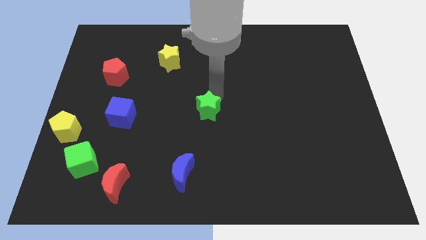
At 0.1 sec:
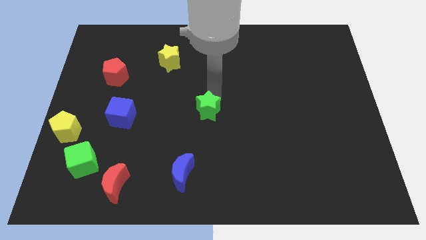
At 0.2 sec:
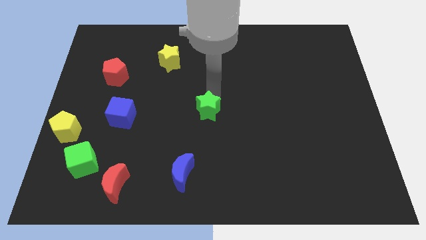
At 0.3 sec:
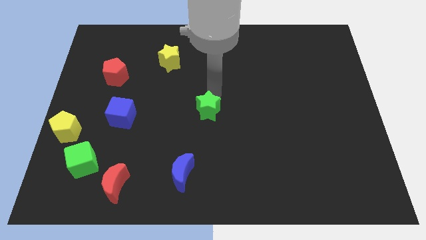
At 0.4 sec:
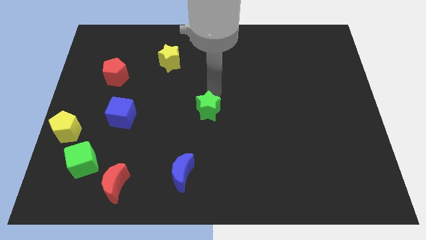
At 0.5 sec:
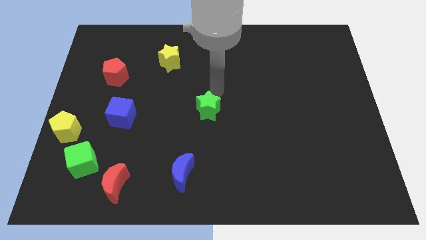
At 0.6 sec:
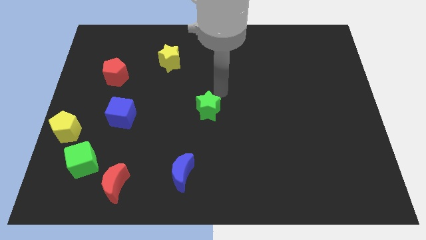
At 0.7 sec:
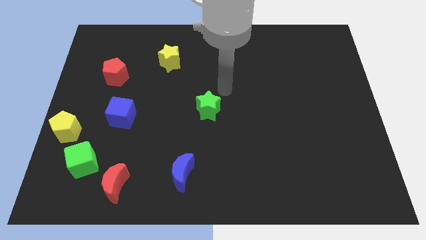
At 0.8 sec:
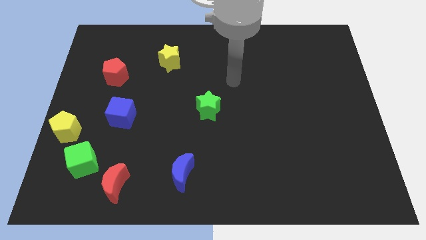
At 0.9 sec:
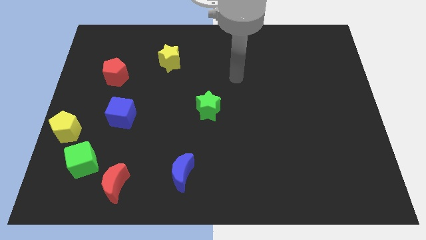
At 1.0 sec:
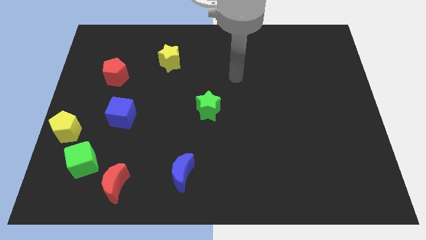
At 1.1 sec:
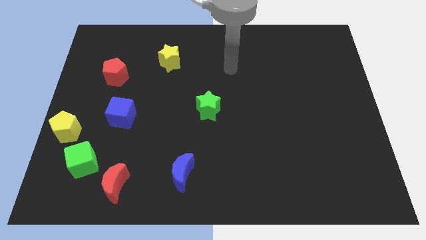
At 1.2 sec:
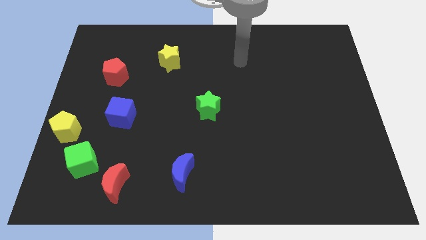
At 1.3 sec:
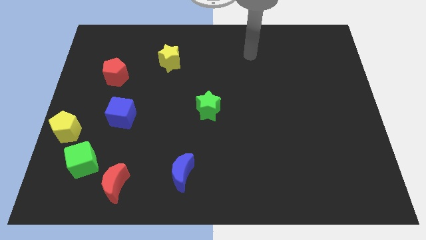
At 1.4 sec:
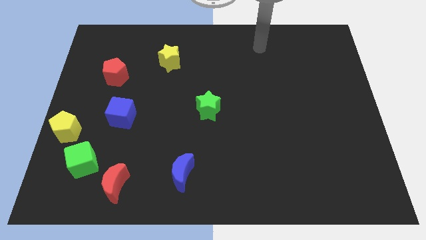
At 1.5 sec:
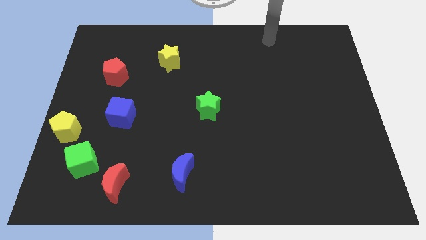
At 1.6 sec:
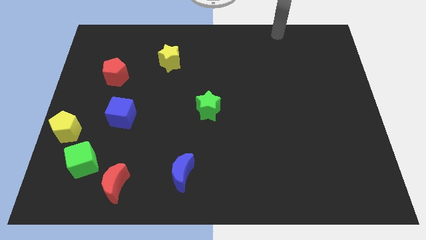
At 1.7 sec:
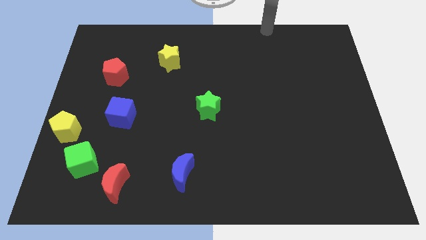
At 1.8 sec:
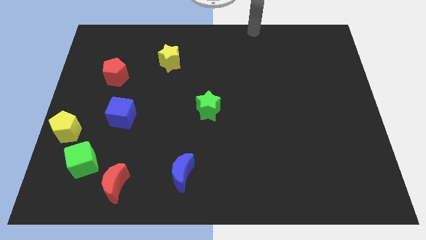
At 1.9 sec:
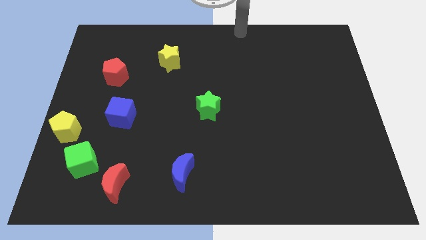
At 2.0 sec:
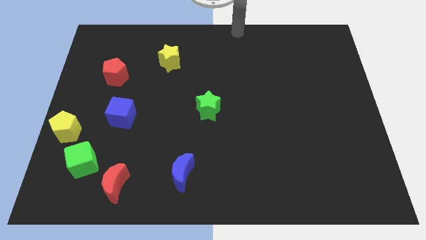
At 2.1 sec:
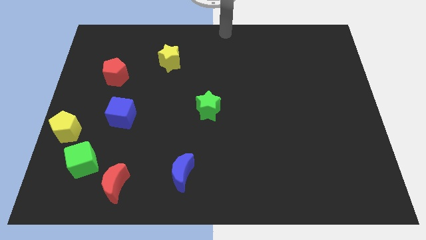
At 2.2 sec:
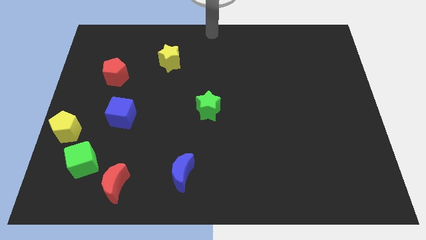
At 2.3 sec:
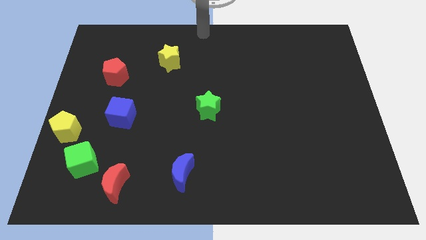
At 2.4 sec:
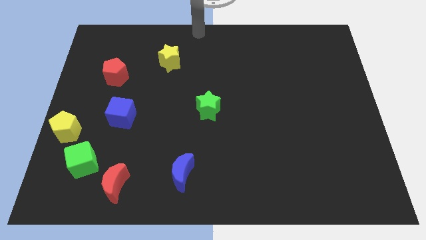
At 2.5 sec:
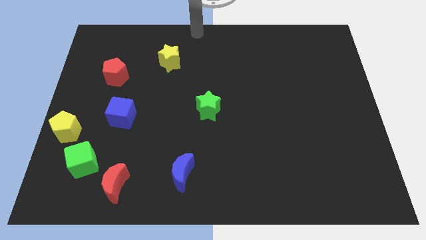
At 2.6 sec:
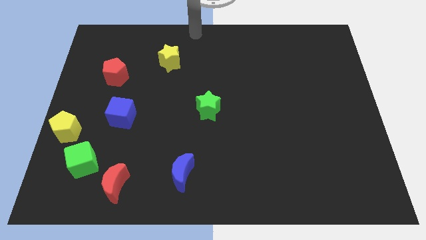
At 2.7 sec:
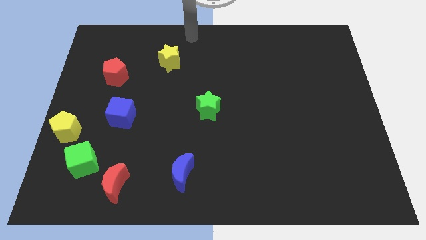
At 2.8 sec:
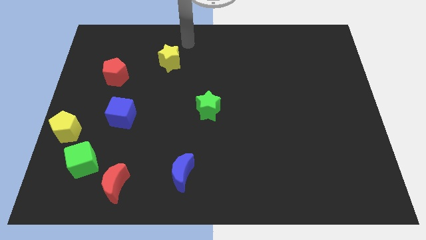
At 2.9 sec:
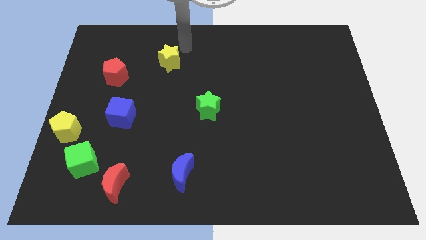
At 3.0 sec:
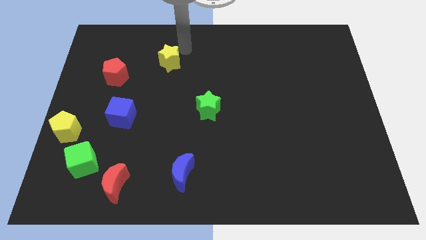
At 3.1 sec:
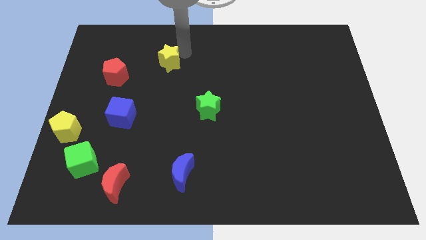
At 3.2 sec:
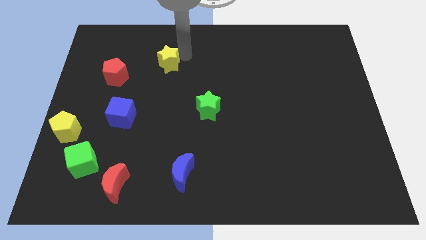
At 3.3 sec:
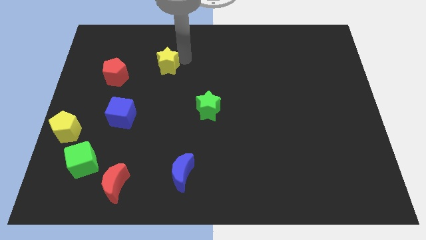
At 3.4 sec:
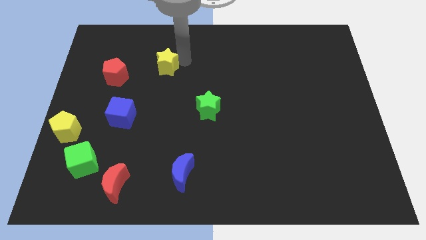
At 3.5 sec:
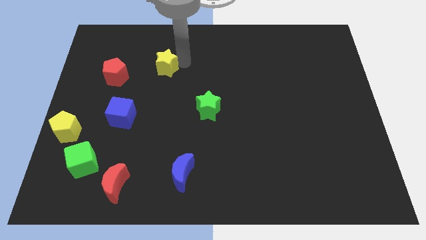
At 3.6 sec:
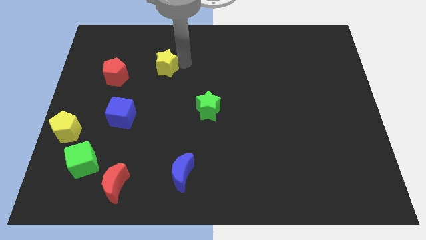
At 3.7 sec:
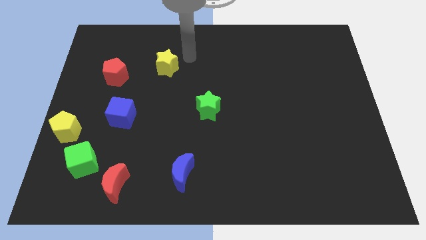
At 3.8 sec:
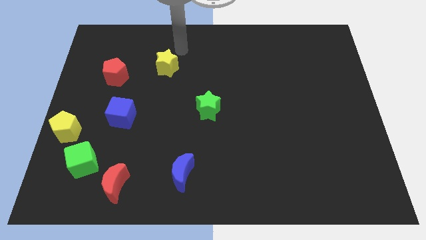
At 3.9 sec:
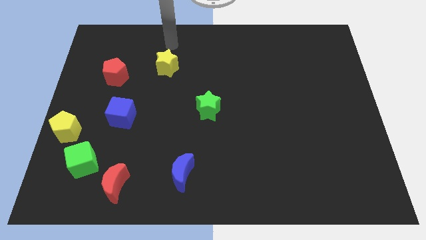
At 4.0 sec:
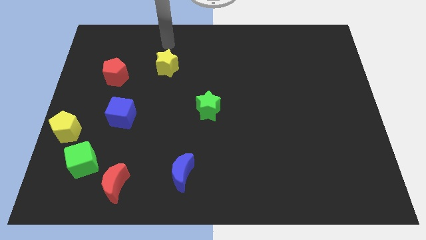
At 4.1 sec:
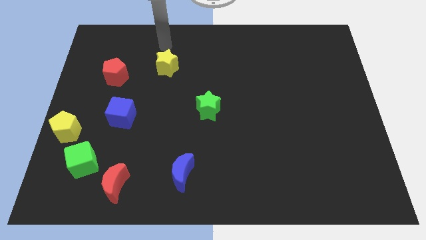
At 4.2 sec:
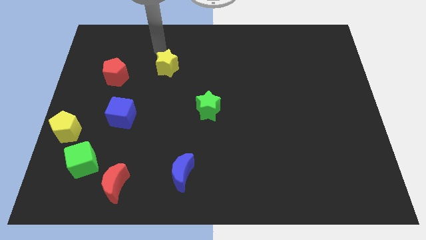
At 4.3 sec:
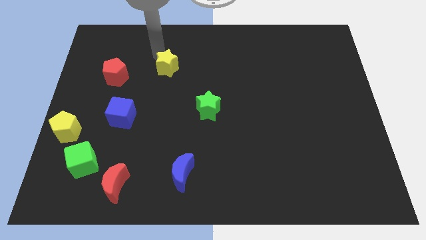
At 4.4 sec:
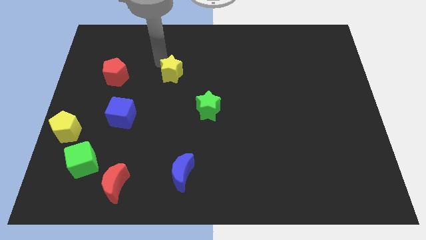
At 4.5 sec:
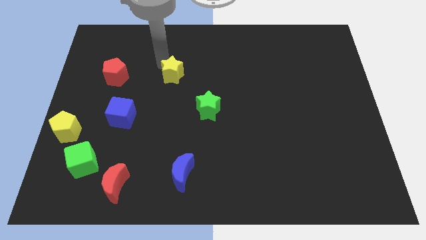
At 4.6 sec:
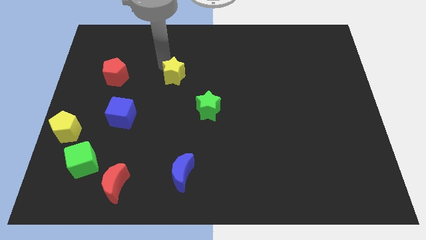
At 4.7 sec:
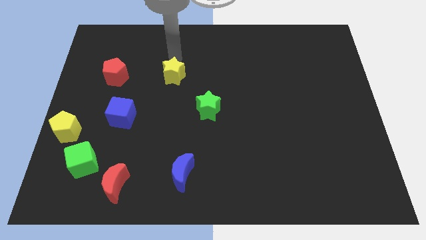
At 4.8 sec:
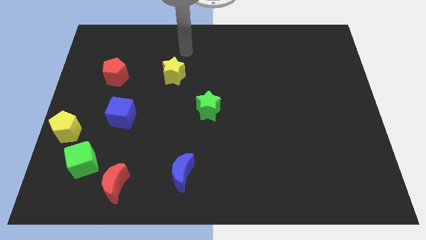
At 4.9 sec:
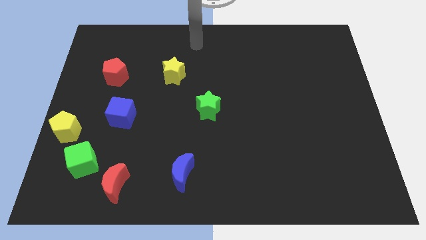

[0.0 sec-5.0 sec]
place the yellow star to the right of the red pentagon

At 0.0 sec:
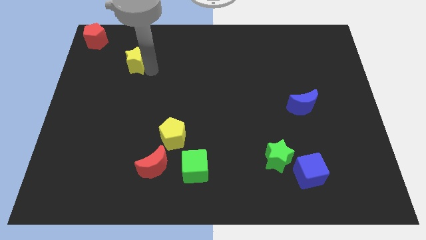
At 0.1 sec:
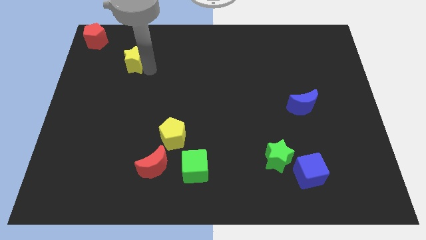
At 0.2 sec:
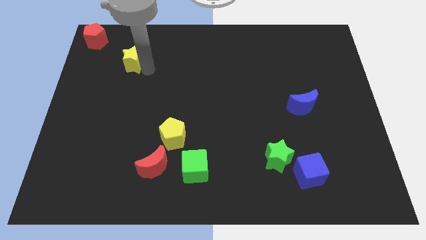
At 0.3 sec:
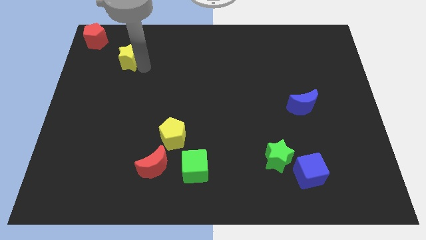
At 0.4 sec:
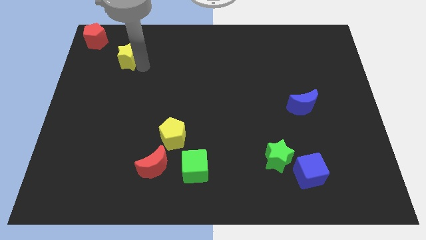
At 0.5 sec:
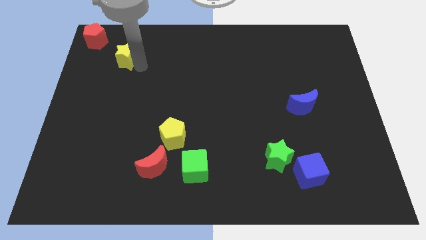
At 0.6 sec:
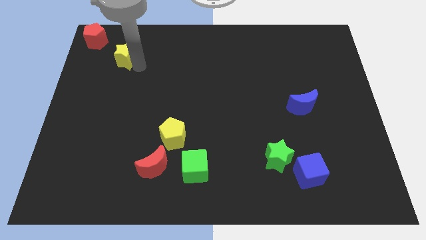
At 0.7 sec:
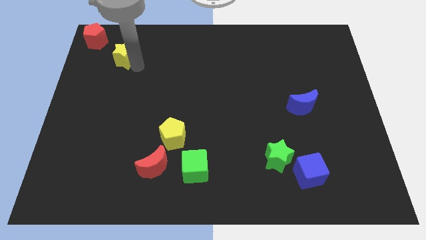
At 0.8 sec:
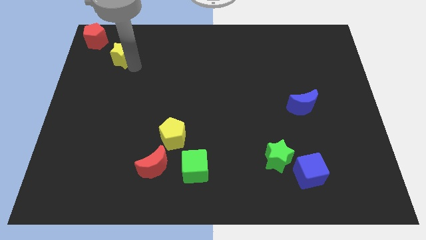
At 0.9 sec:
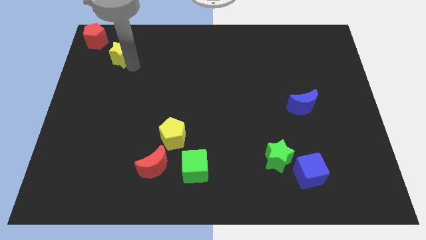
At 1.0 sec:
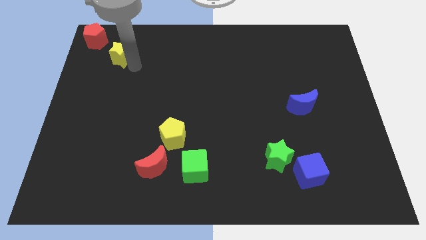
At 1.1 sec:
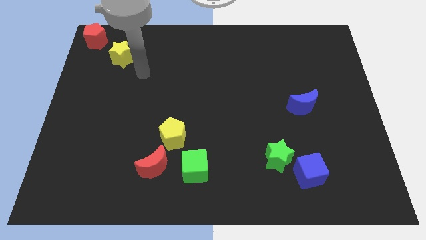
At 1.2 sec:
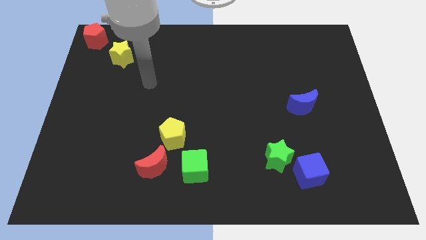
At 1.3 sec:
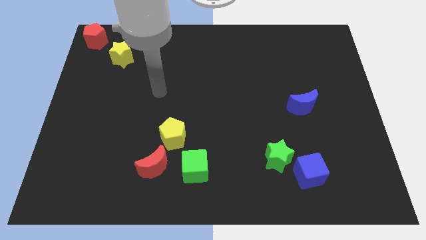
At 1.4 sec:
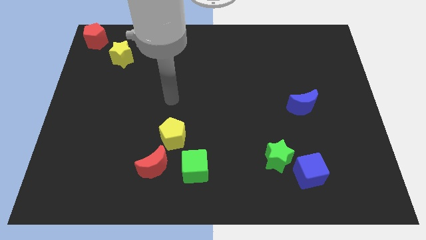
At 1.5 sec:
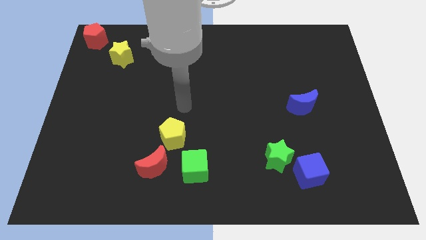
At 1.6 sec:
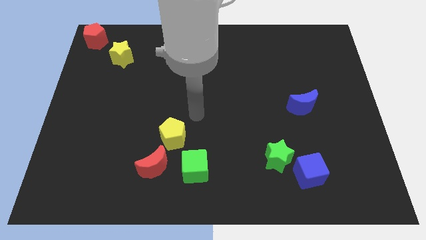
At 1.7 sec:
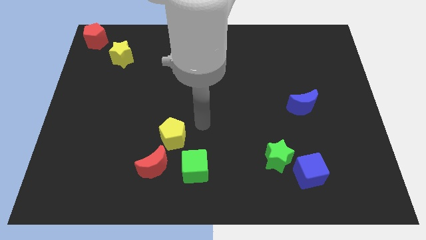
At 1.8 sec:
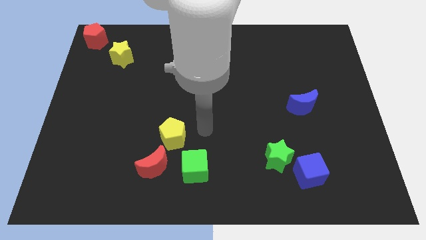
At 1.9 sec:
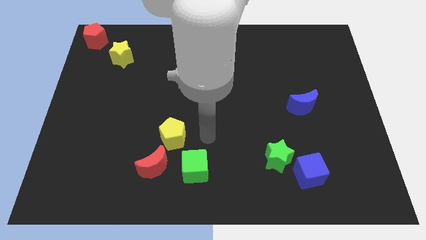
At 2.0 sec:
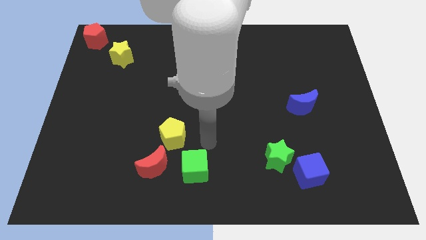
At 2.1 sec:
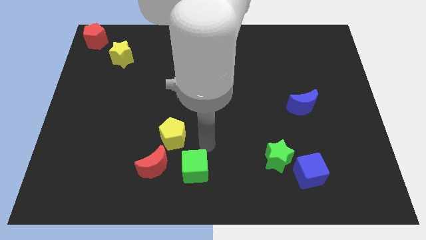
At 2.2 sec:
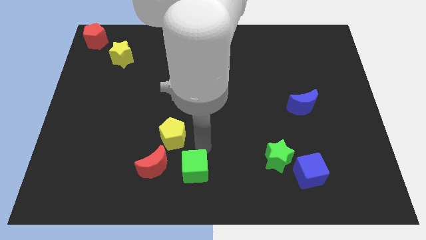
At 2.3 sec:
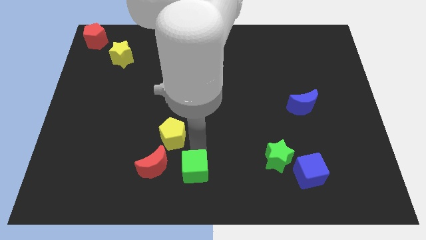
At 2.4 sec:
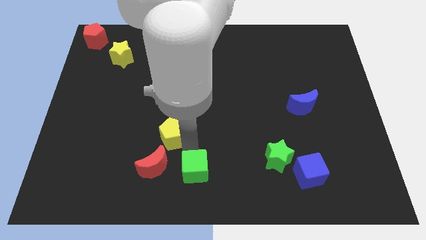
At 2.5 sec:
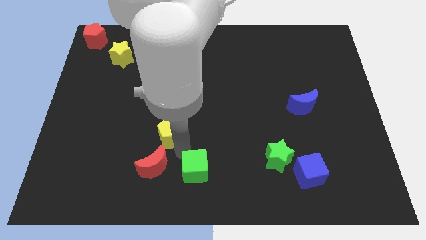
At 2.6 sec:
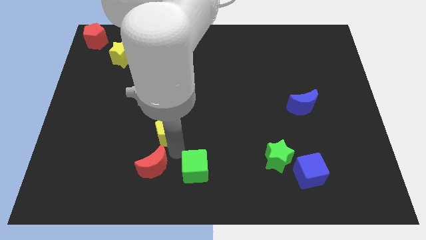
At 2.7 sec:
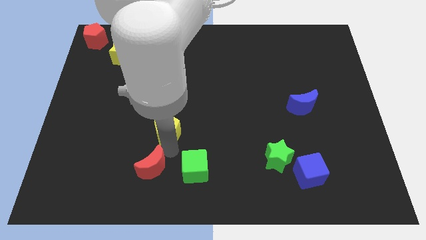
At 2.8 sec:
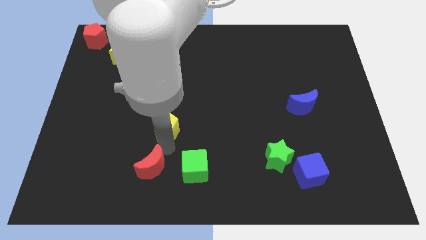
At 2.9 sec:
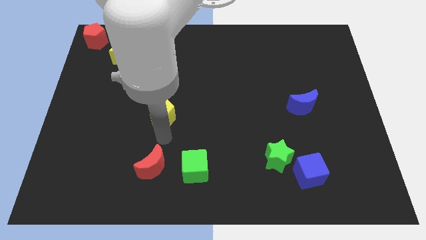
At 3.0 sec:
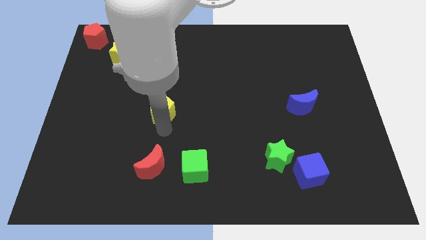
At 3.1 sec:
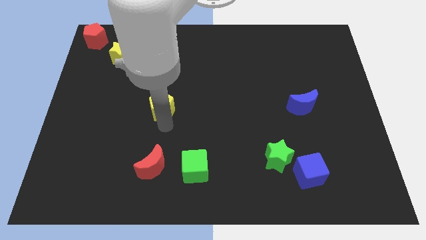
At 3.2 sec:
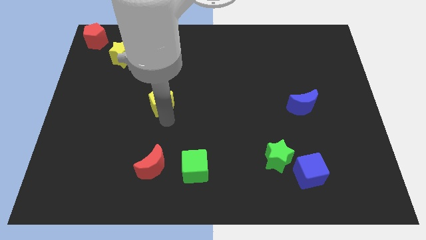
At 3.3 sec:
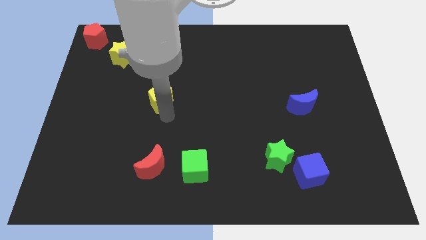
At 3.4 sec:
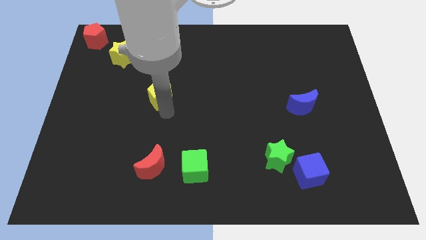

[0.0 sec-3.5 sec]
move yellow pentagon towards the yellow star

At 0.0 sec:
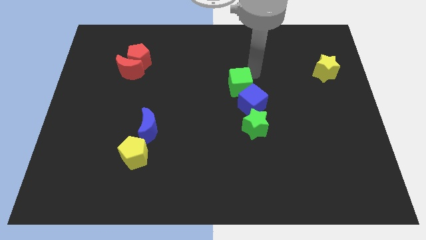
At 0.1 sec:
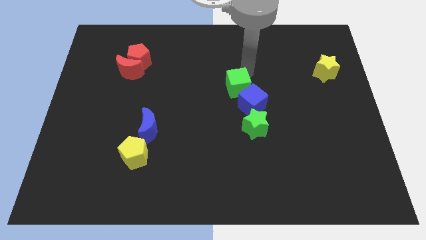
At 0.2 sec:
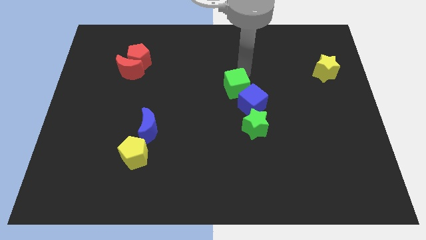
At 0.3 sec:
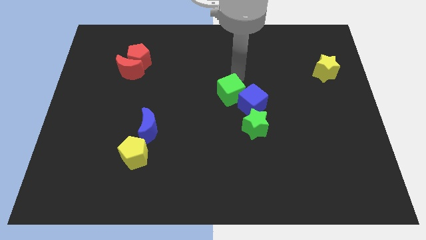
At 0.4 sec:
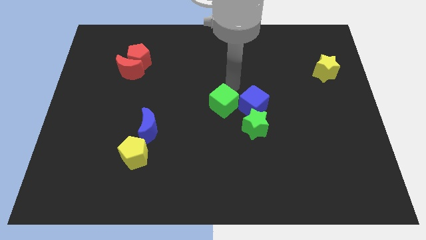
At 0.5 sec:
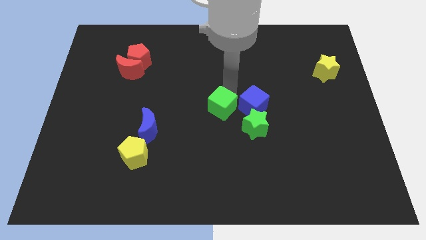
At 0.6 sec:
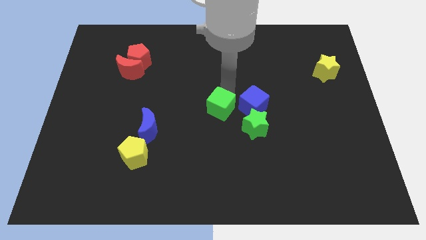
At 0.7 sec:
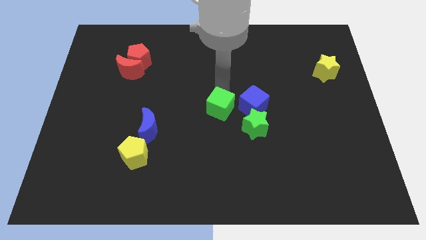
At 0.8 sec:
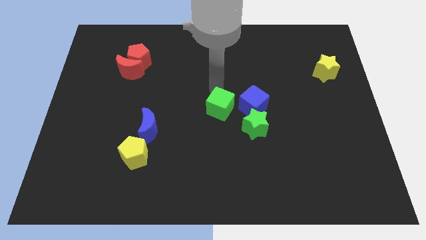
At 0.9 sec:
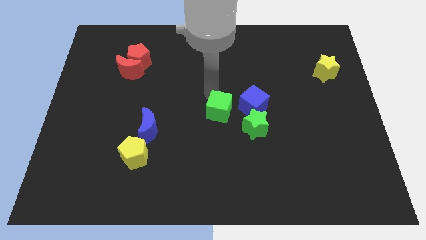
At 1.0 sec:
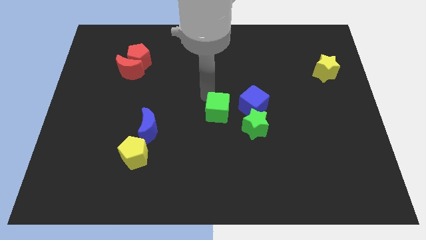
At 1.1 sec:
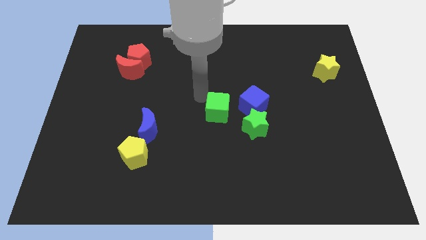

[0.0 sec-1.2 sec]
move the green cube left to the blue cube
